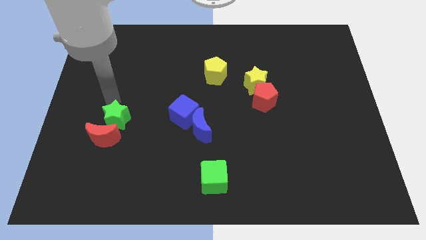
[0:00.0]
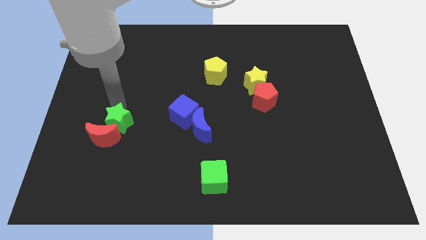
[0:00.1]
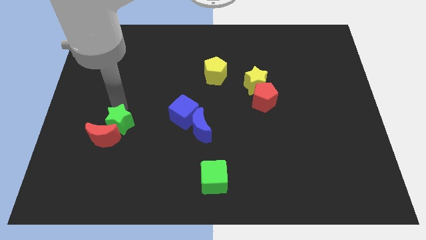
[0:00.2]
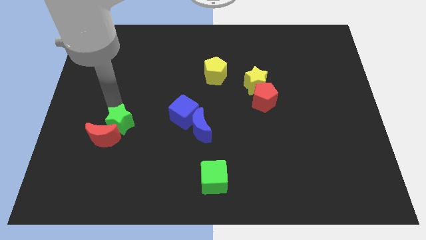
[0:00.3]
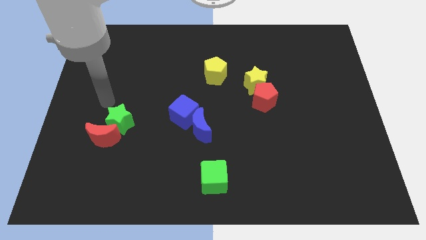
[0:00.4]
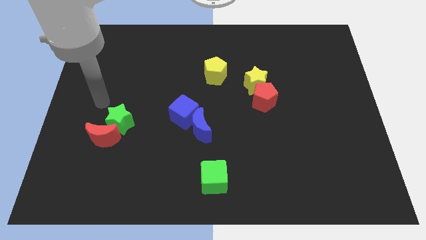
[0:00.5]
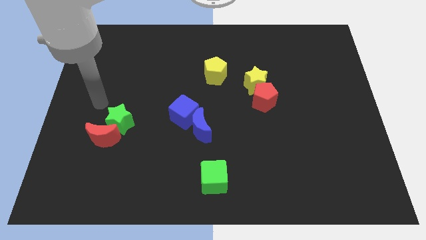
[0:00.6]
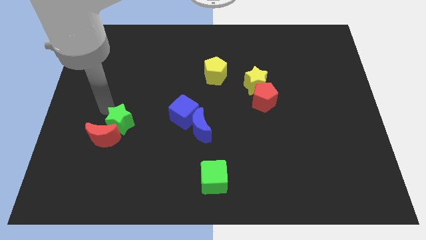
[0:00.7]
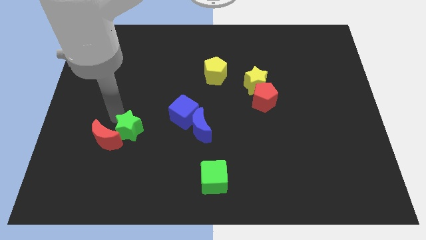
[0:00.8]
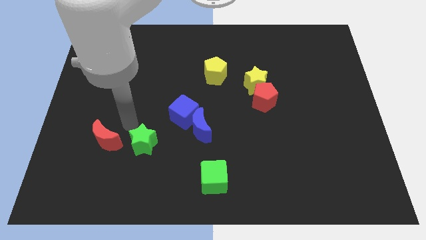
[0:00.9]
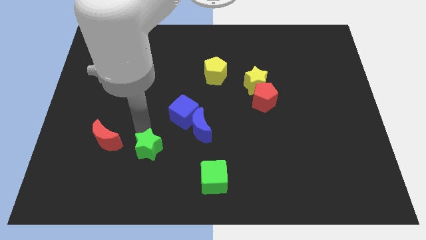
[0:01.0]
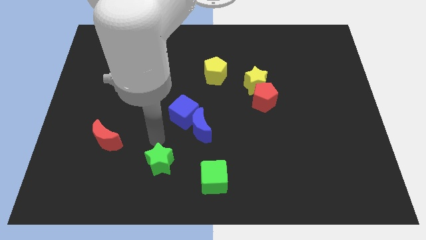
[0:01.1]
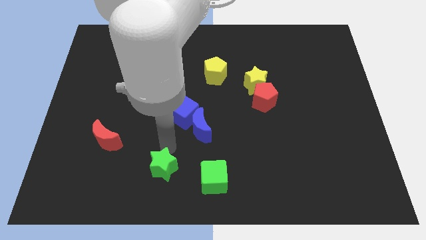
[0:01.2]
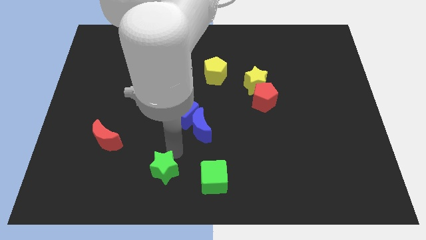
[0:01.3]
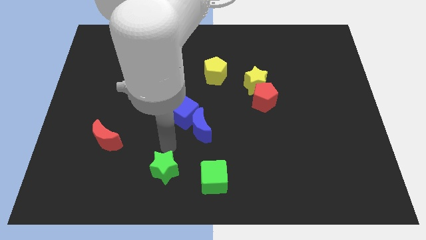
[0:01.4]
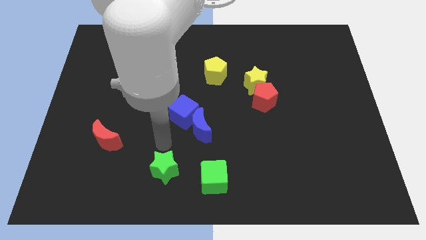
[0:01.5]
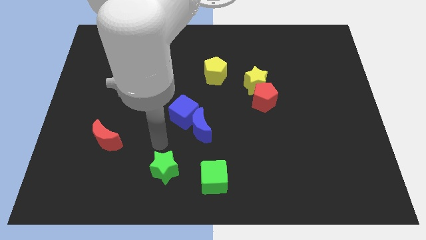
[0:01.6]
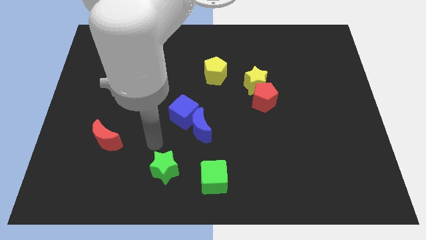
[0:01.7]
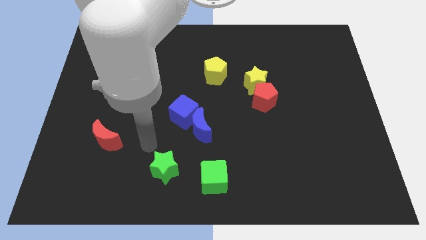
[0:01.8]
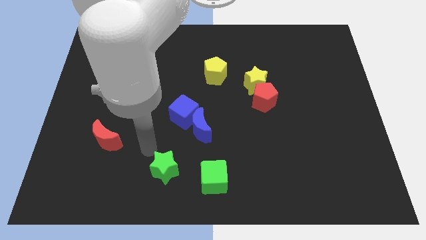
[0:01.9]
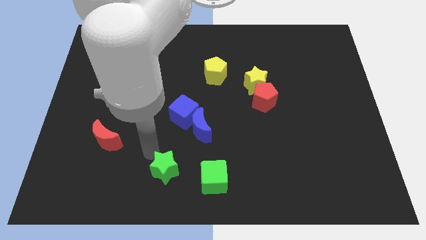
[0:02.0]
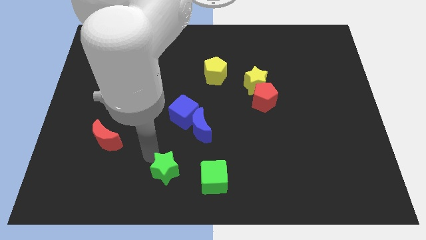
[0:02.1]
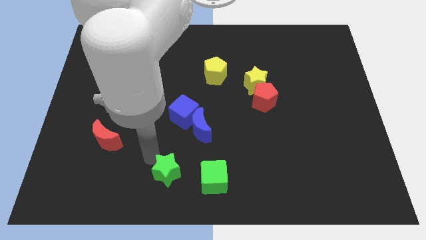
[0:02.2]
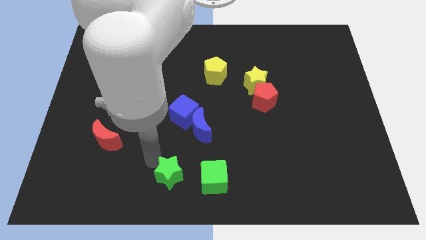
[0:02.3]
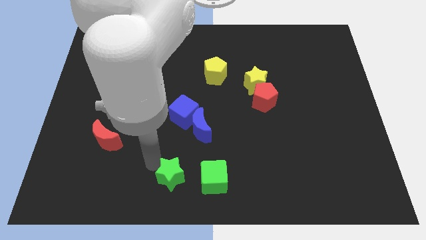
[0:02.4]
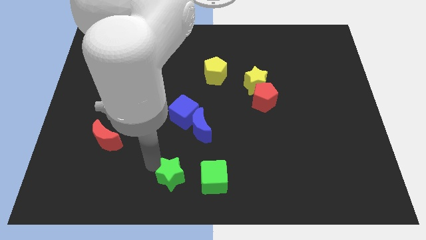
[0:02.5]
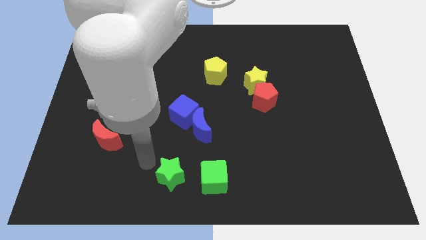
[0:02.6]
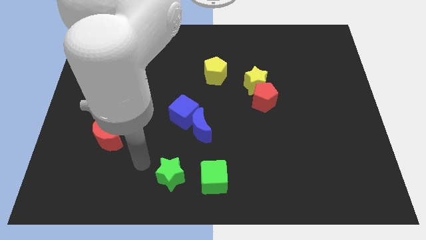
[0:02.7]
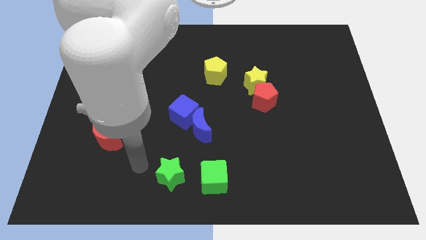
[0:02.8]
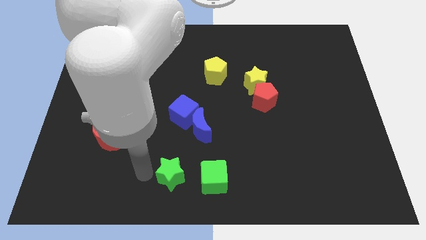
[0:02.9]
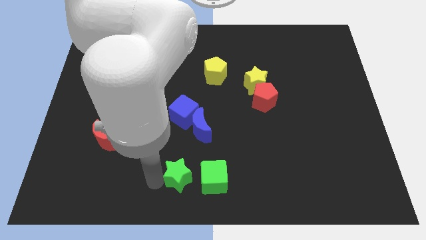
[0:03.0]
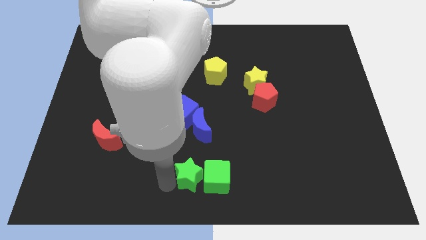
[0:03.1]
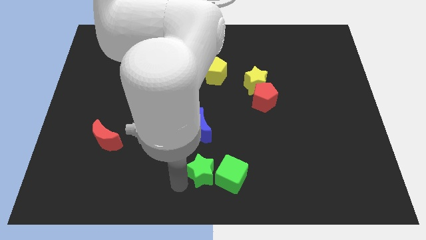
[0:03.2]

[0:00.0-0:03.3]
push the green star into the left side of the green cube

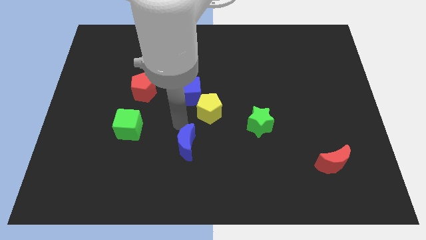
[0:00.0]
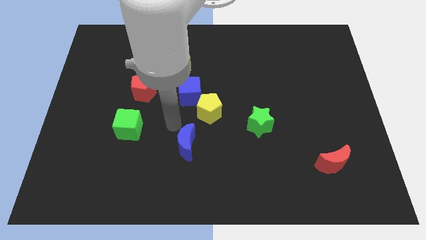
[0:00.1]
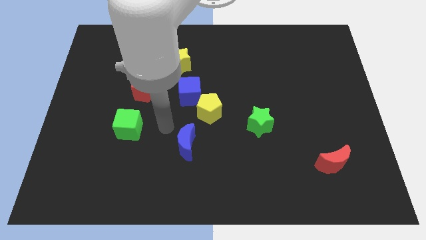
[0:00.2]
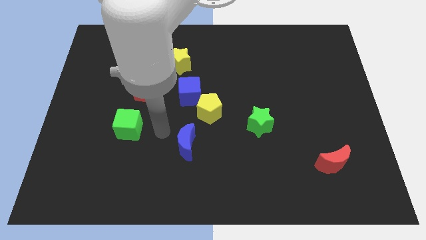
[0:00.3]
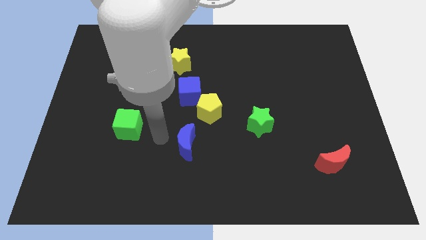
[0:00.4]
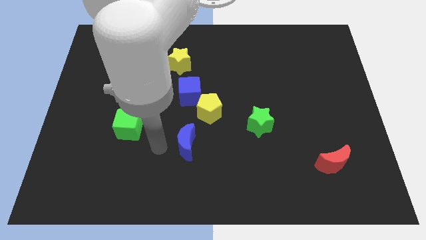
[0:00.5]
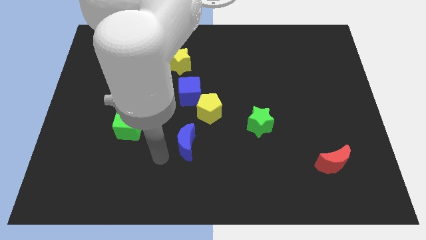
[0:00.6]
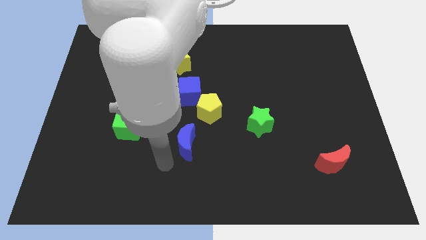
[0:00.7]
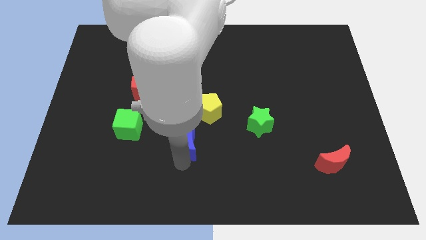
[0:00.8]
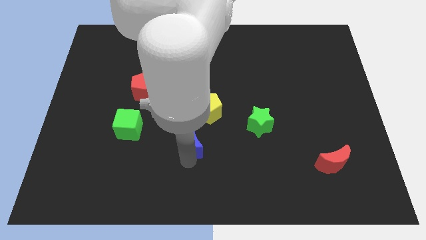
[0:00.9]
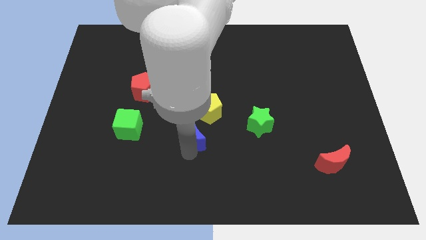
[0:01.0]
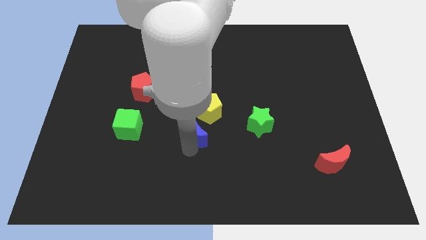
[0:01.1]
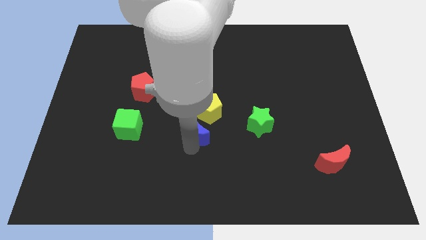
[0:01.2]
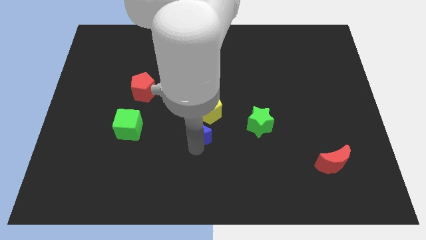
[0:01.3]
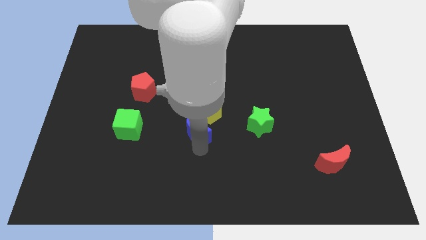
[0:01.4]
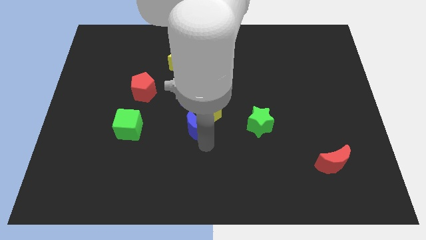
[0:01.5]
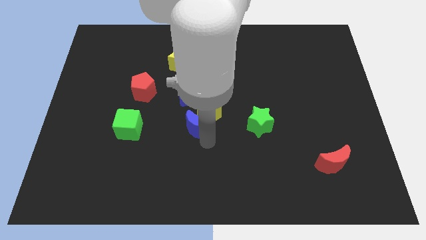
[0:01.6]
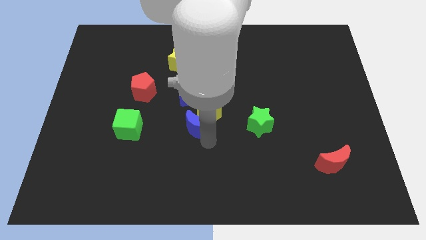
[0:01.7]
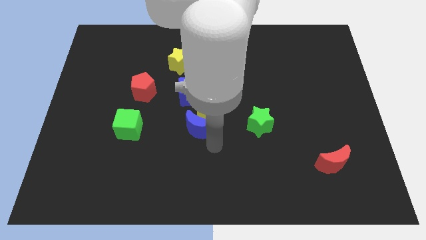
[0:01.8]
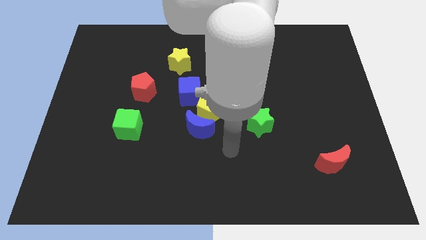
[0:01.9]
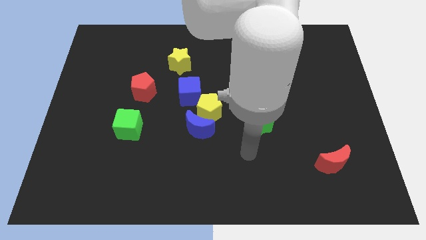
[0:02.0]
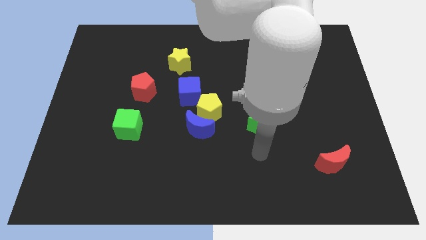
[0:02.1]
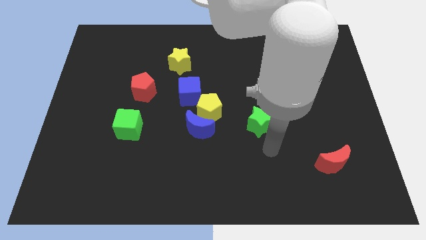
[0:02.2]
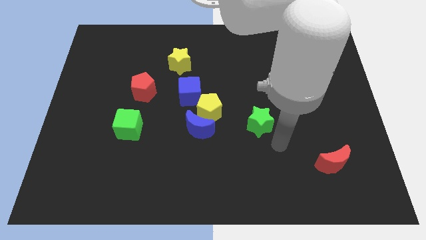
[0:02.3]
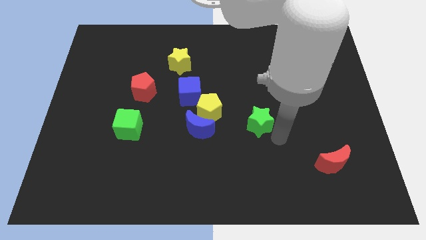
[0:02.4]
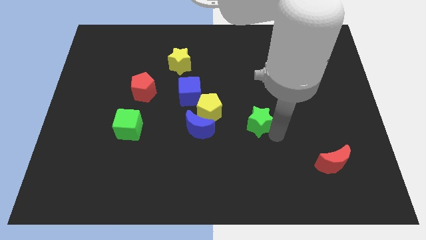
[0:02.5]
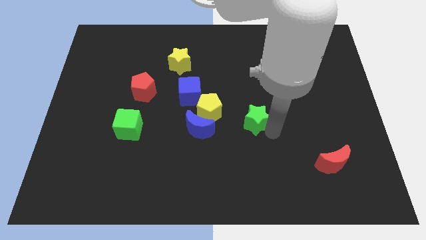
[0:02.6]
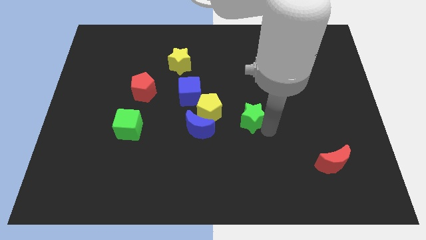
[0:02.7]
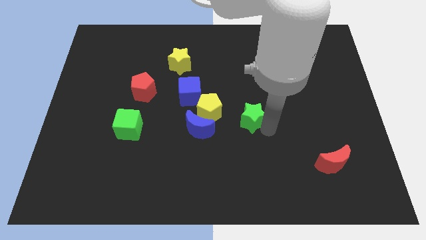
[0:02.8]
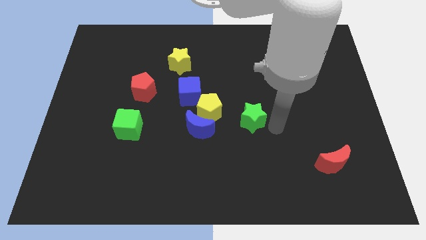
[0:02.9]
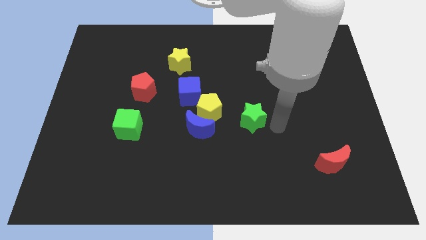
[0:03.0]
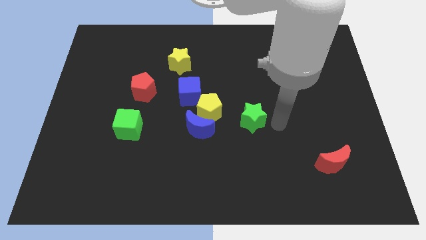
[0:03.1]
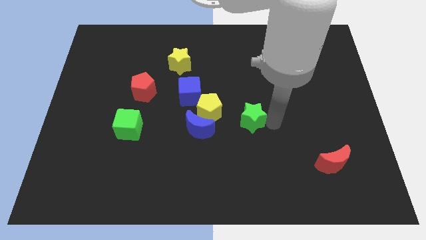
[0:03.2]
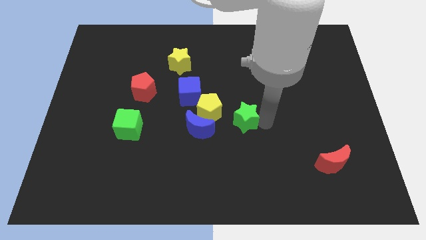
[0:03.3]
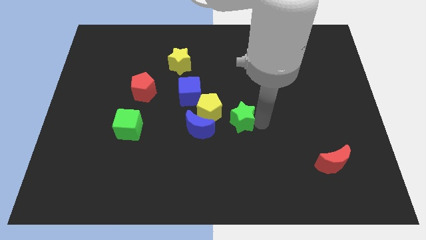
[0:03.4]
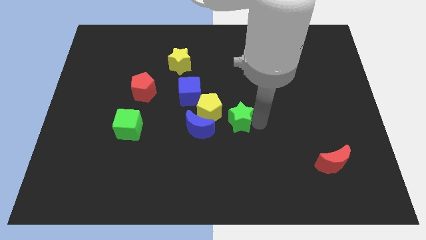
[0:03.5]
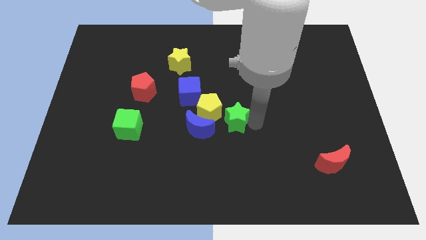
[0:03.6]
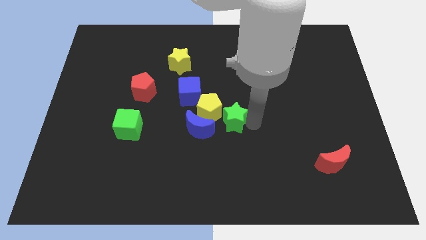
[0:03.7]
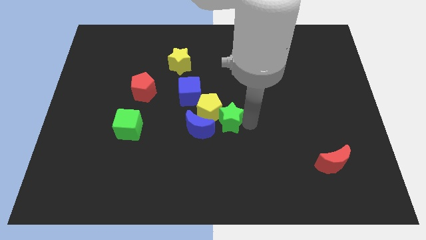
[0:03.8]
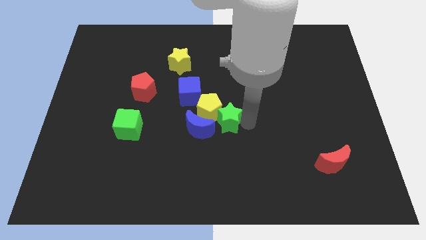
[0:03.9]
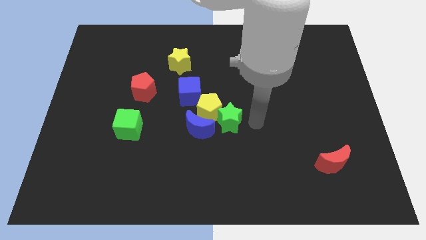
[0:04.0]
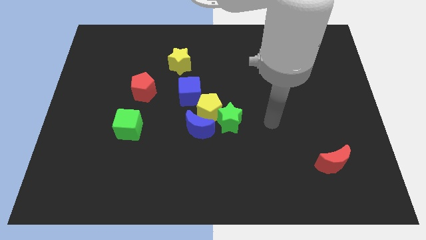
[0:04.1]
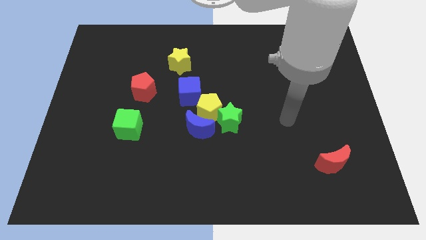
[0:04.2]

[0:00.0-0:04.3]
push the blue crescent and green star into the yellow pentagon

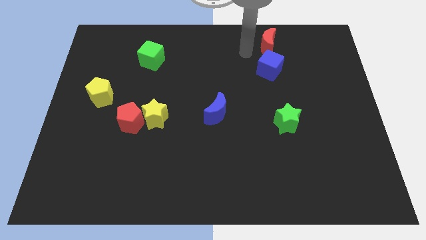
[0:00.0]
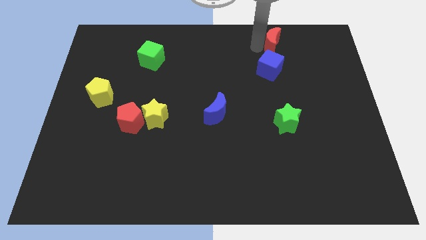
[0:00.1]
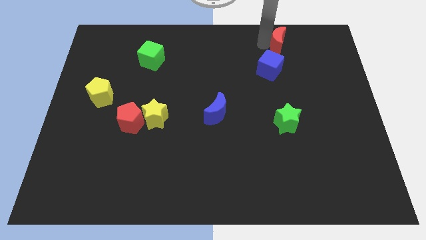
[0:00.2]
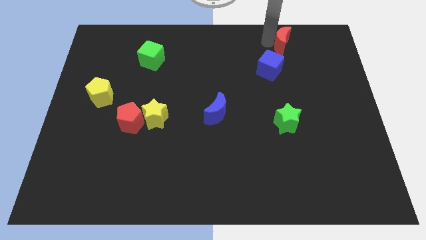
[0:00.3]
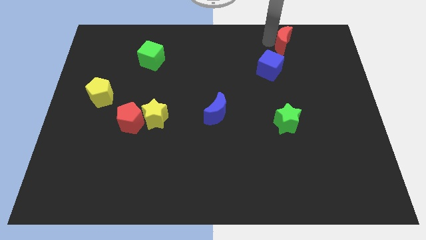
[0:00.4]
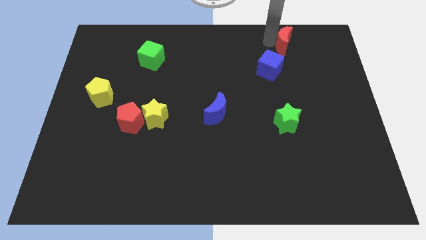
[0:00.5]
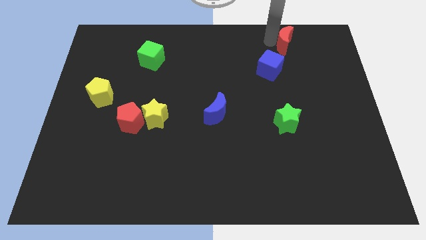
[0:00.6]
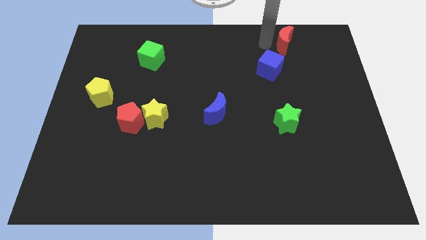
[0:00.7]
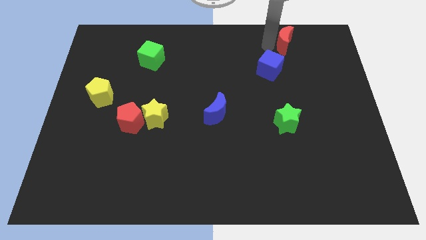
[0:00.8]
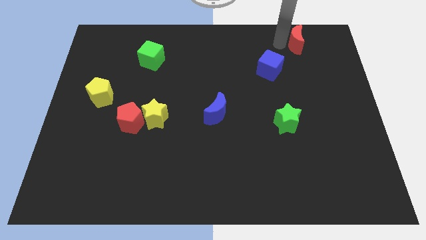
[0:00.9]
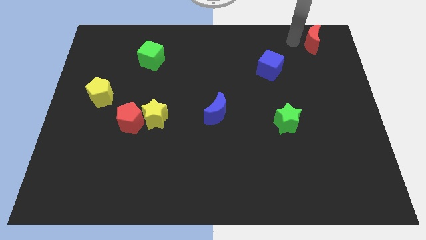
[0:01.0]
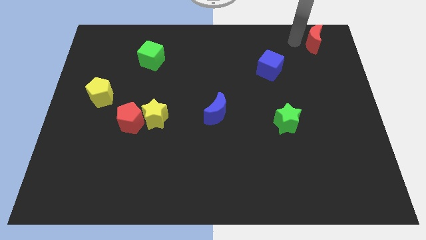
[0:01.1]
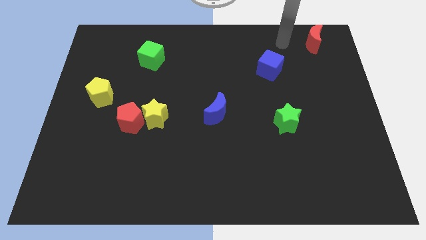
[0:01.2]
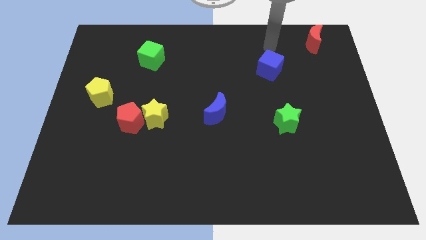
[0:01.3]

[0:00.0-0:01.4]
push the red moon to the top right side of the board
